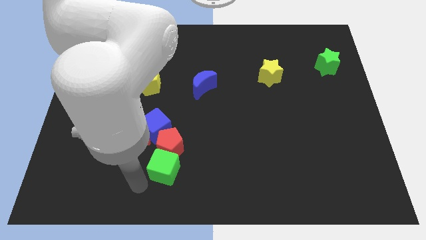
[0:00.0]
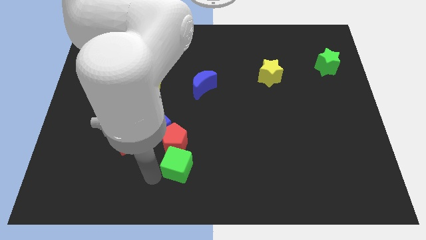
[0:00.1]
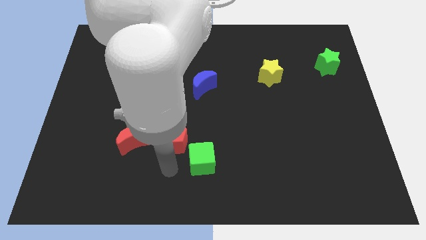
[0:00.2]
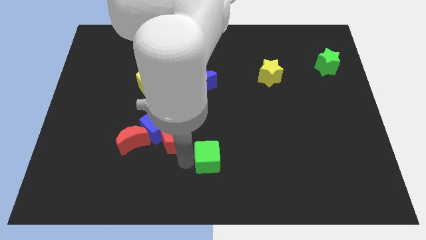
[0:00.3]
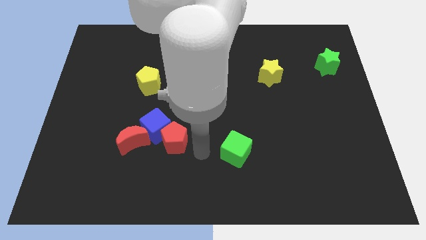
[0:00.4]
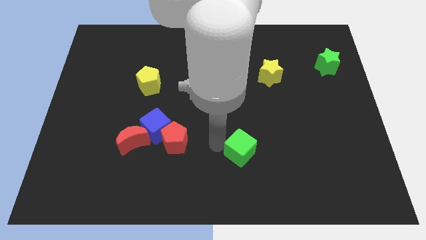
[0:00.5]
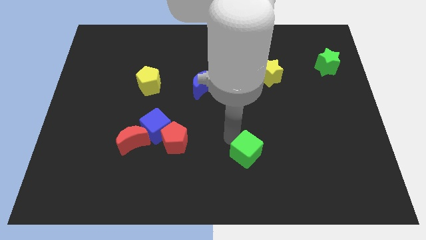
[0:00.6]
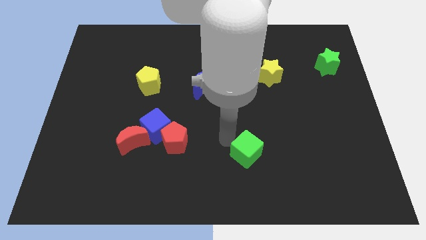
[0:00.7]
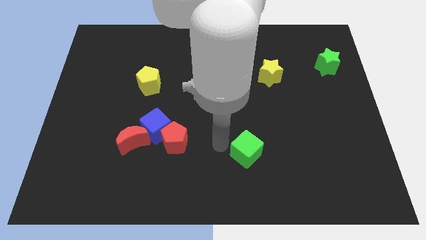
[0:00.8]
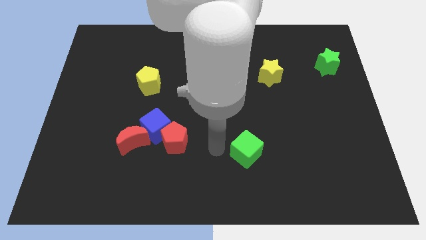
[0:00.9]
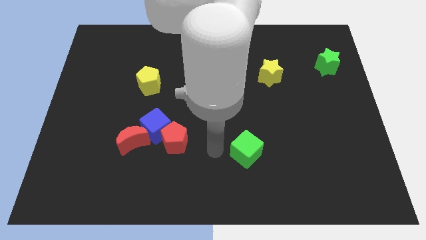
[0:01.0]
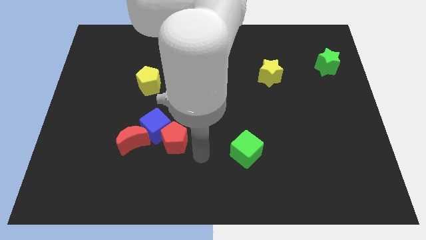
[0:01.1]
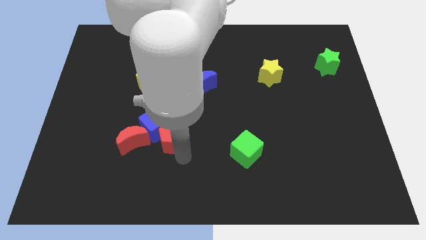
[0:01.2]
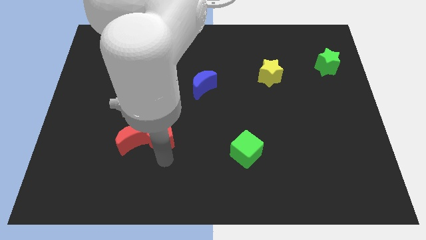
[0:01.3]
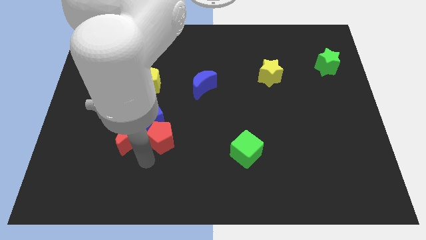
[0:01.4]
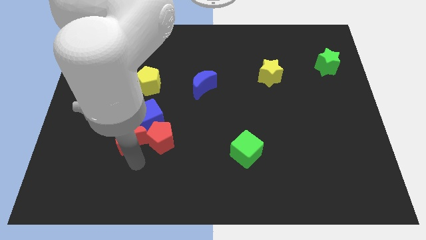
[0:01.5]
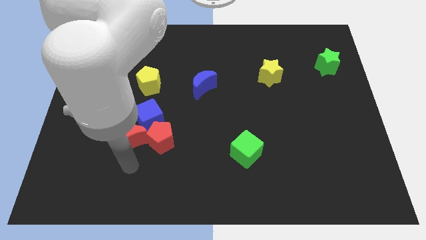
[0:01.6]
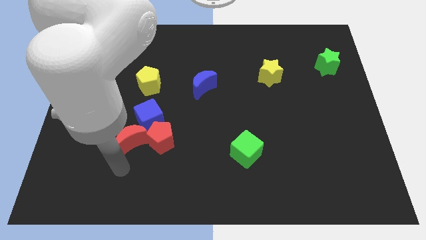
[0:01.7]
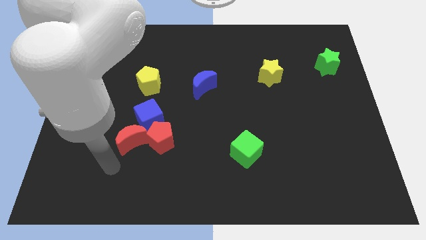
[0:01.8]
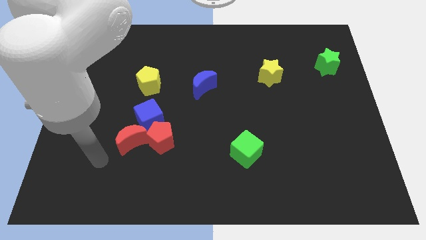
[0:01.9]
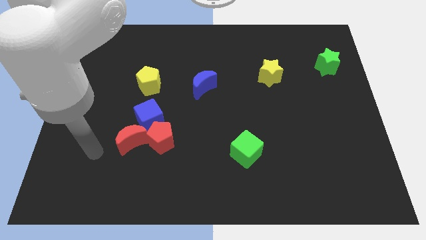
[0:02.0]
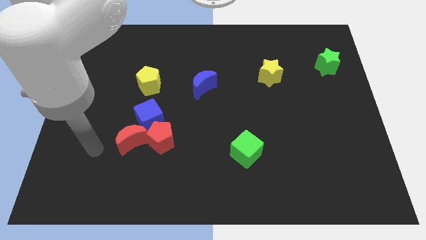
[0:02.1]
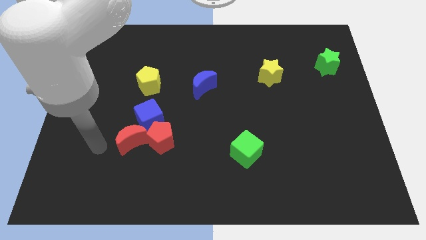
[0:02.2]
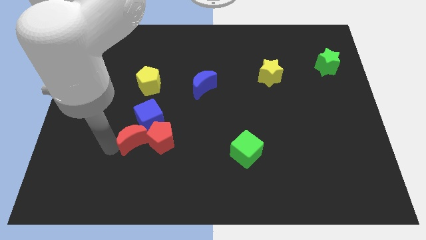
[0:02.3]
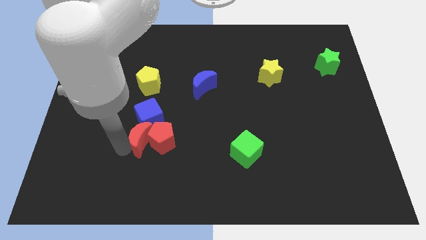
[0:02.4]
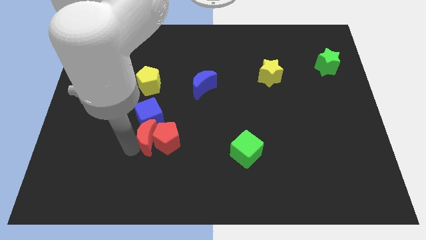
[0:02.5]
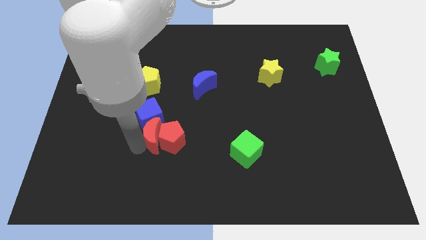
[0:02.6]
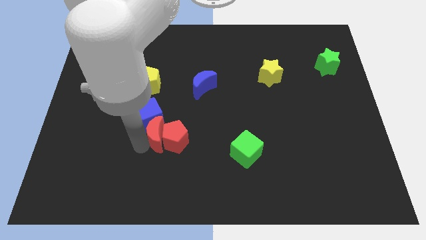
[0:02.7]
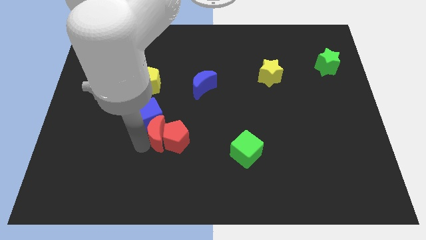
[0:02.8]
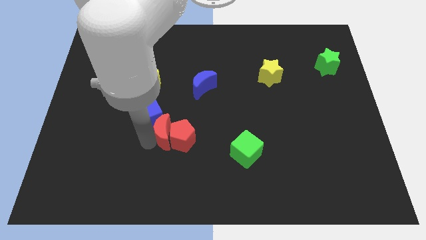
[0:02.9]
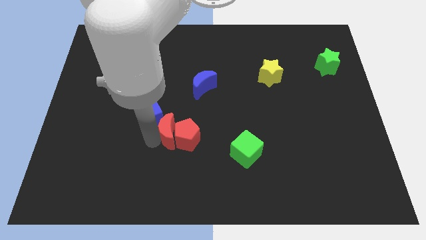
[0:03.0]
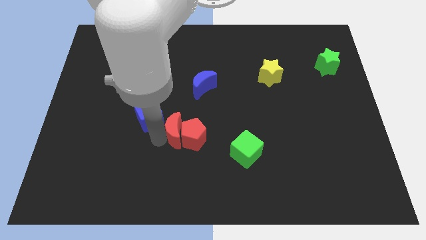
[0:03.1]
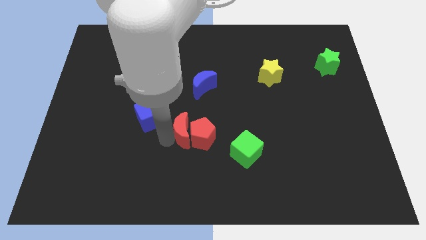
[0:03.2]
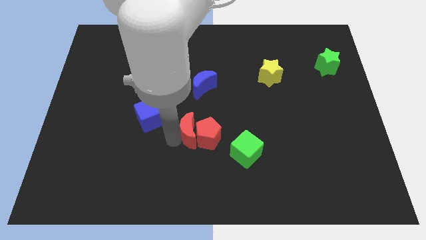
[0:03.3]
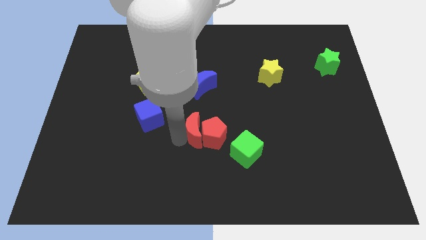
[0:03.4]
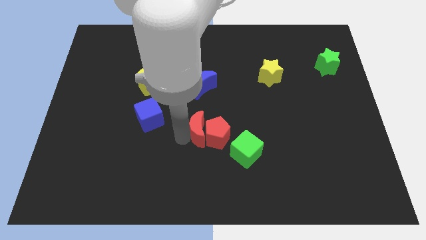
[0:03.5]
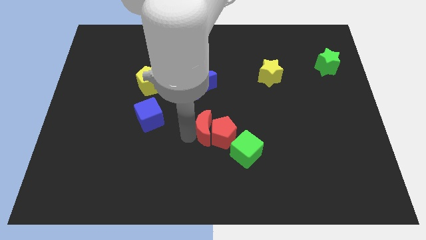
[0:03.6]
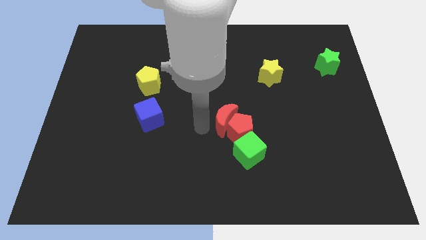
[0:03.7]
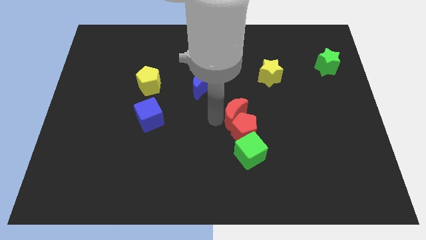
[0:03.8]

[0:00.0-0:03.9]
place the red crescent and red pentagon above the green cube

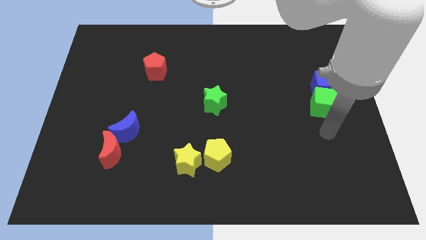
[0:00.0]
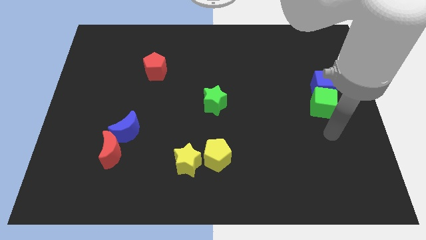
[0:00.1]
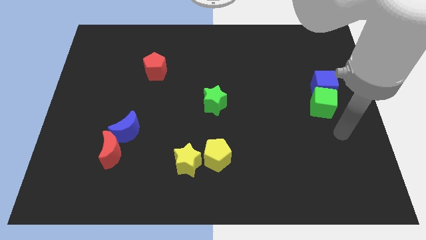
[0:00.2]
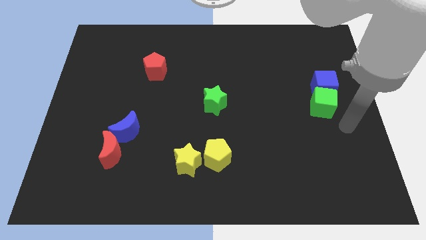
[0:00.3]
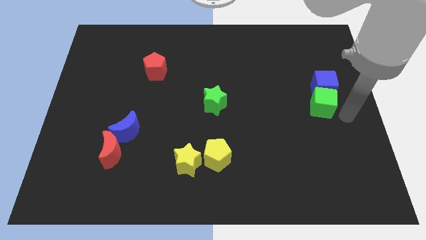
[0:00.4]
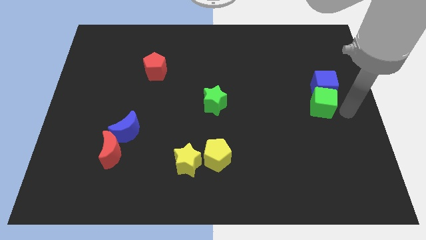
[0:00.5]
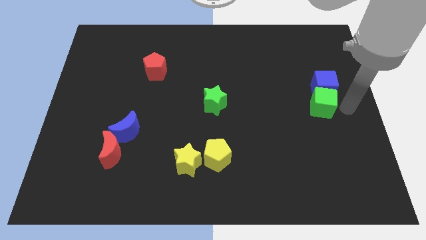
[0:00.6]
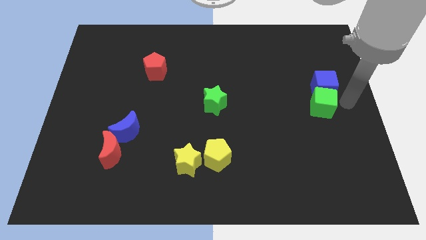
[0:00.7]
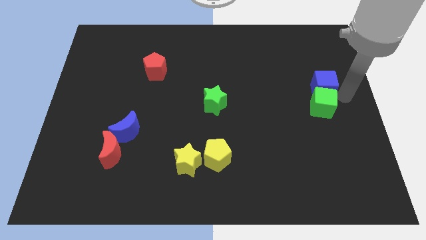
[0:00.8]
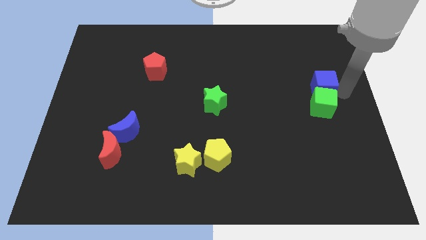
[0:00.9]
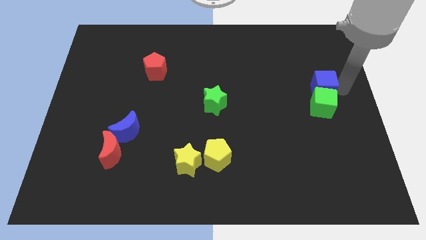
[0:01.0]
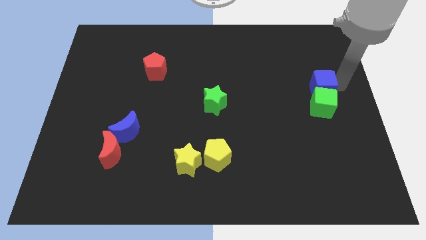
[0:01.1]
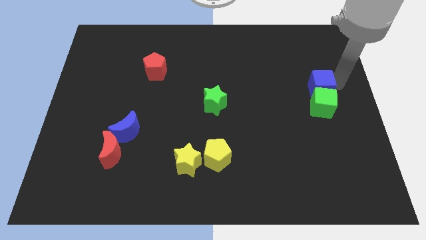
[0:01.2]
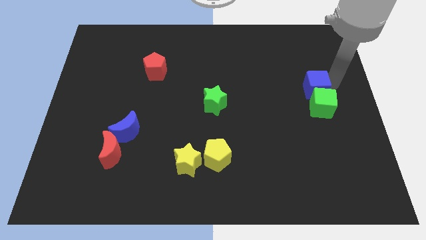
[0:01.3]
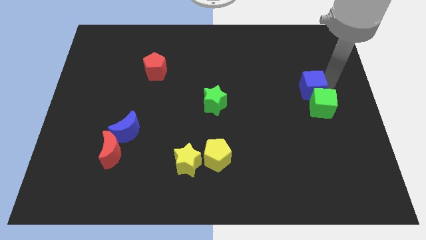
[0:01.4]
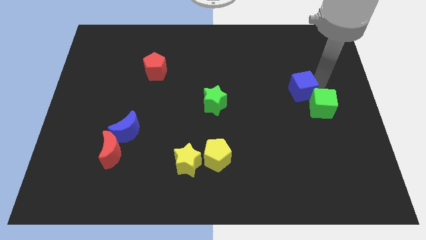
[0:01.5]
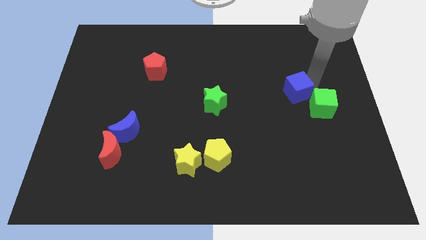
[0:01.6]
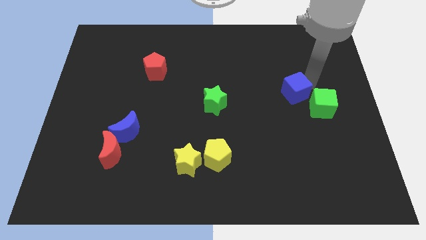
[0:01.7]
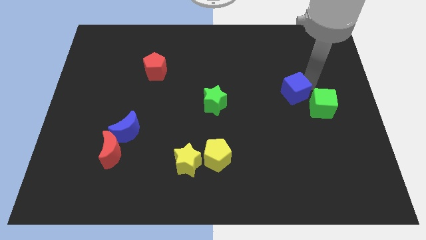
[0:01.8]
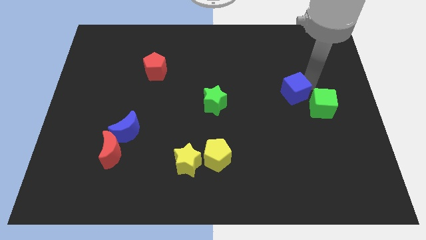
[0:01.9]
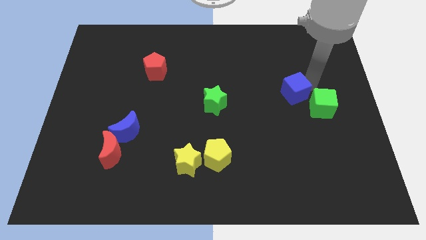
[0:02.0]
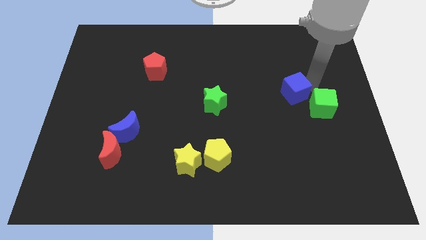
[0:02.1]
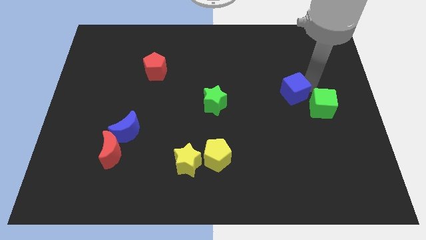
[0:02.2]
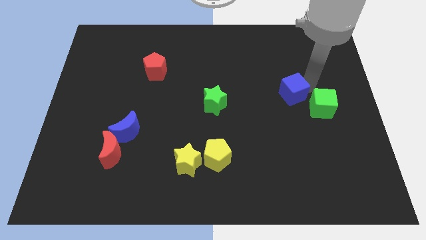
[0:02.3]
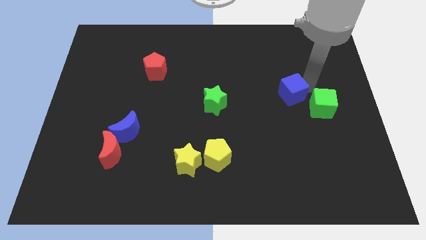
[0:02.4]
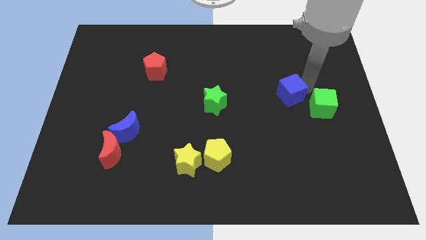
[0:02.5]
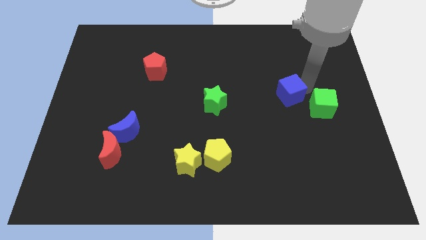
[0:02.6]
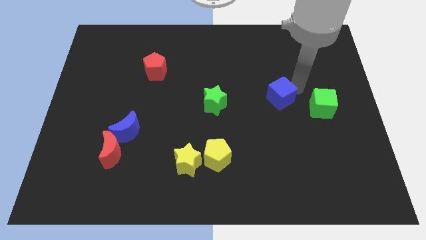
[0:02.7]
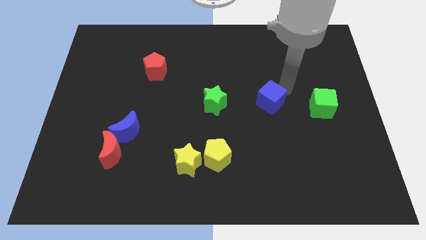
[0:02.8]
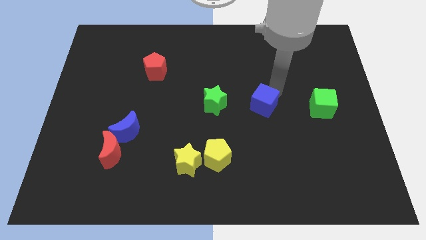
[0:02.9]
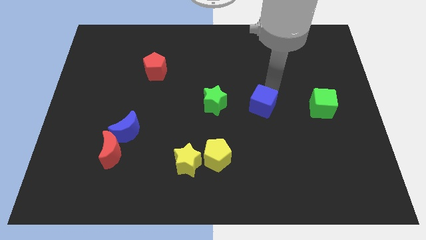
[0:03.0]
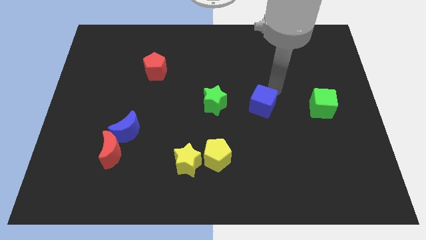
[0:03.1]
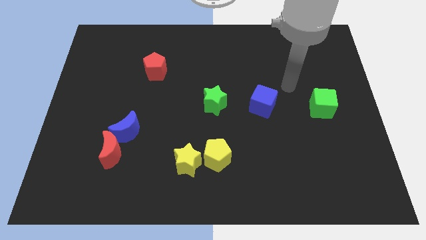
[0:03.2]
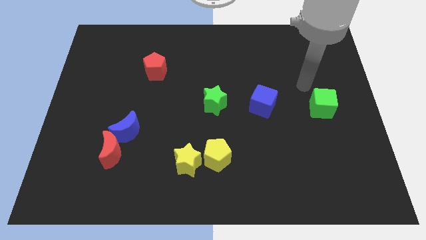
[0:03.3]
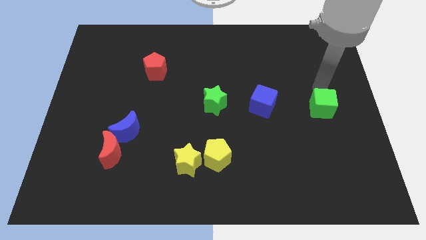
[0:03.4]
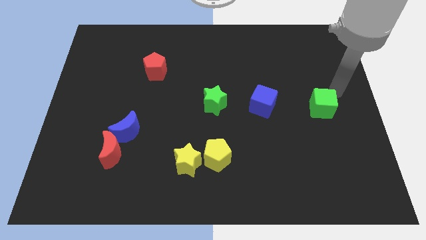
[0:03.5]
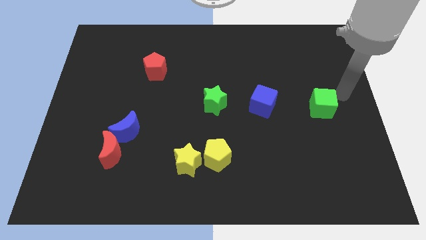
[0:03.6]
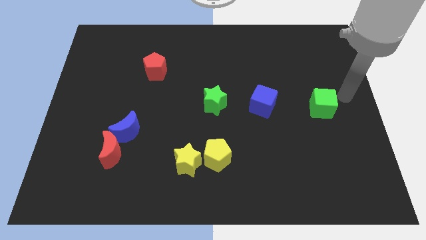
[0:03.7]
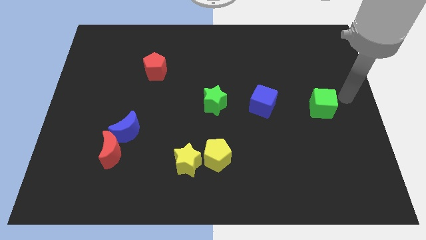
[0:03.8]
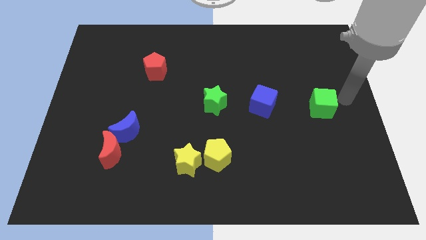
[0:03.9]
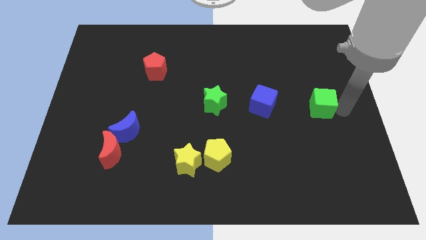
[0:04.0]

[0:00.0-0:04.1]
move the blue cube to the right of the green star

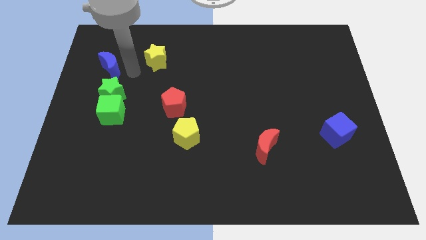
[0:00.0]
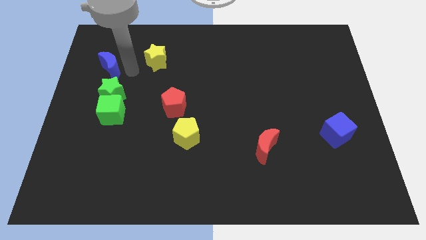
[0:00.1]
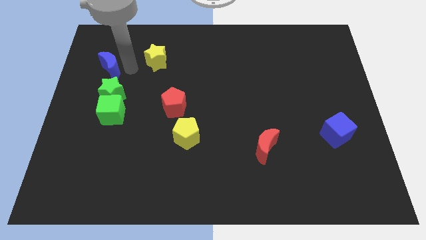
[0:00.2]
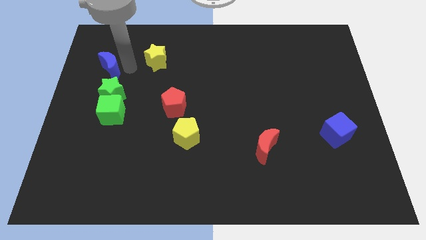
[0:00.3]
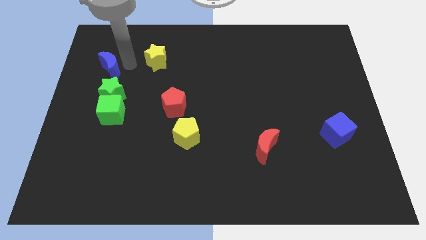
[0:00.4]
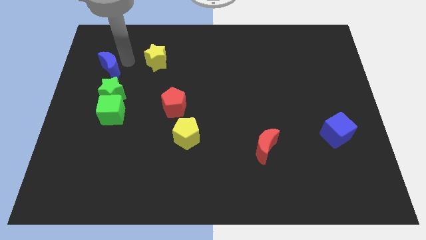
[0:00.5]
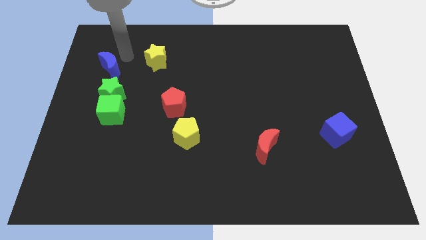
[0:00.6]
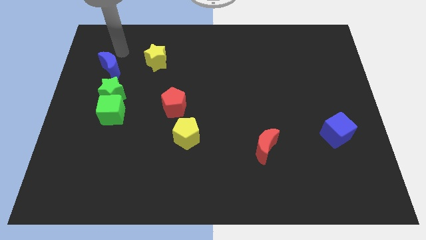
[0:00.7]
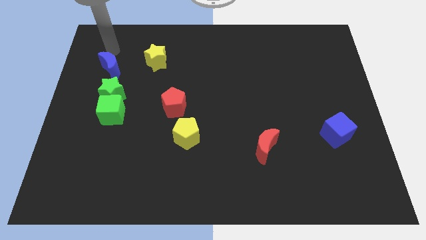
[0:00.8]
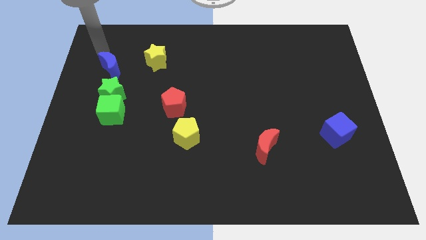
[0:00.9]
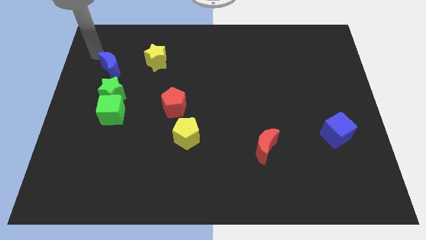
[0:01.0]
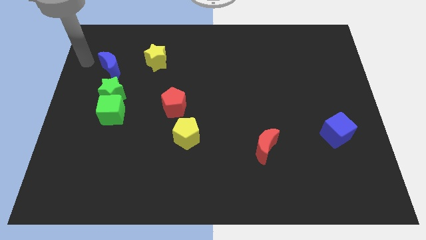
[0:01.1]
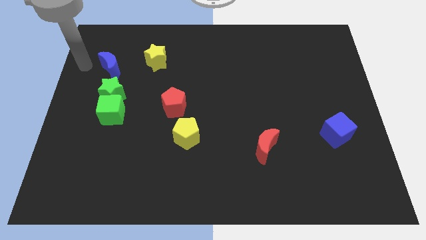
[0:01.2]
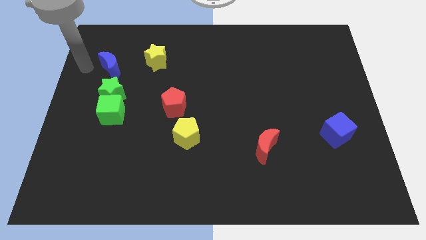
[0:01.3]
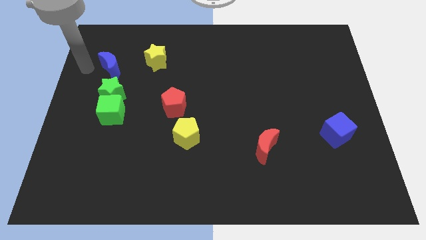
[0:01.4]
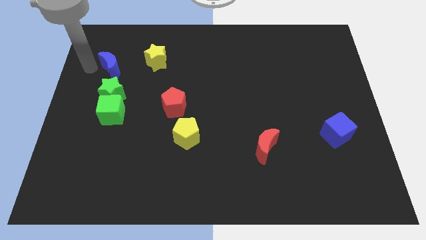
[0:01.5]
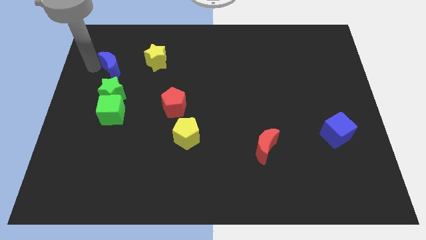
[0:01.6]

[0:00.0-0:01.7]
place the arm left to the blue moon
